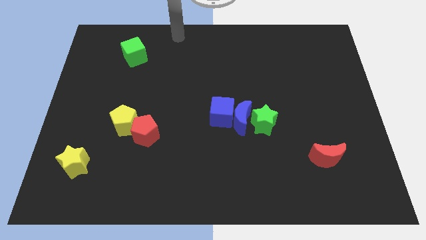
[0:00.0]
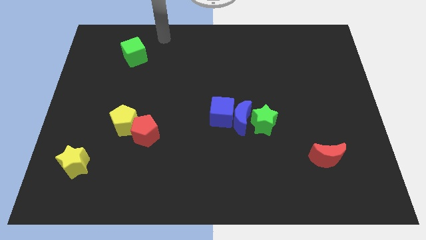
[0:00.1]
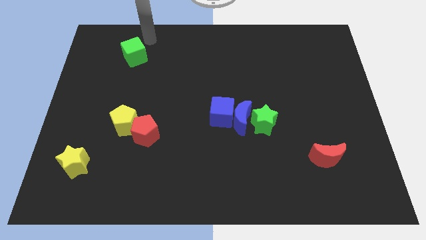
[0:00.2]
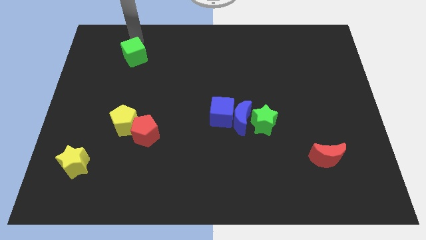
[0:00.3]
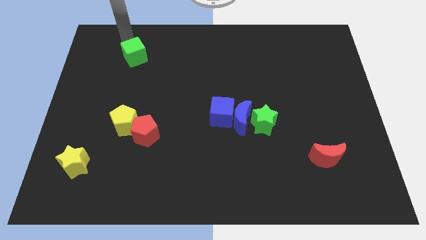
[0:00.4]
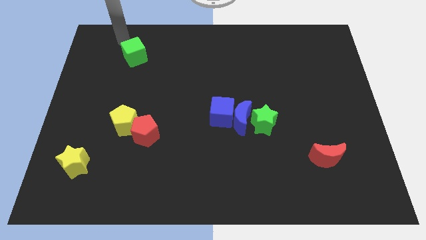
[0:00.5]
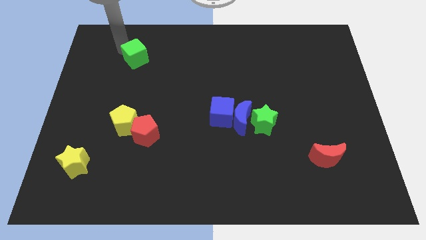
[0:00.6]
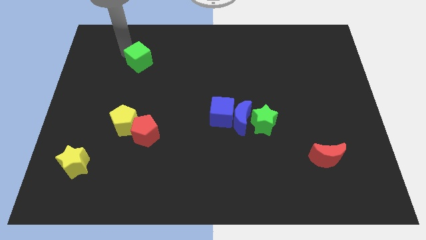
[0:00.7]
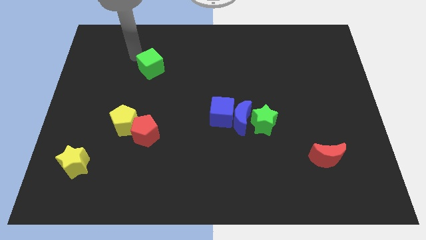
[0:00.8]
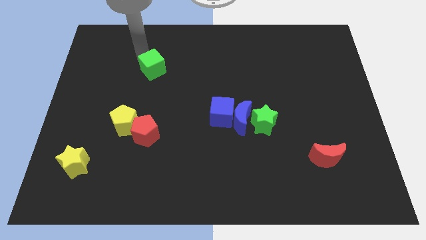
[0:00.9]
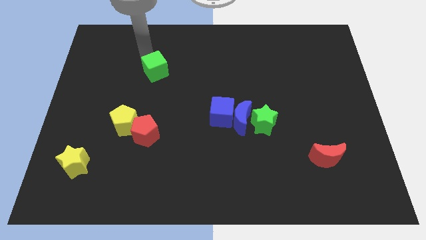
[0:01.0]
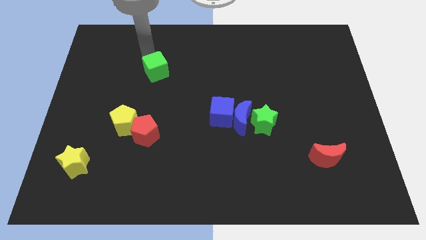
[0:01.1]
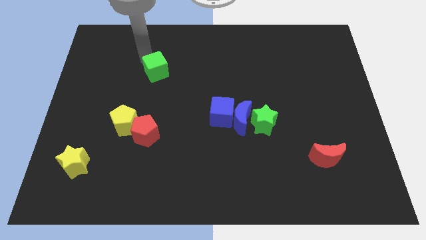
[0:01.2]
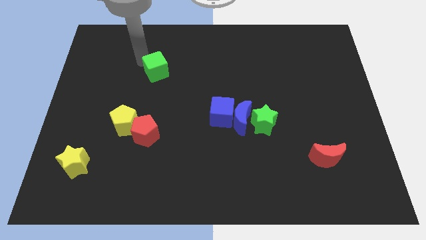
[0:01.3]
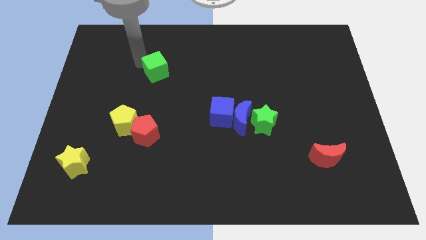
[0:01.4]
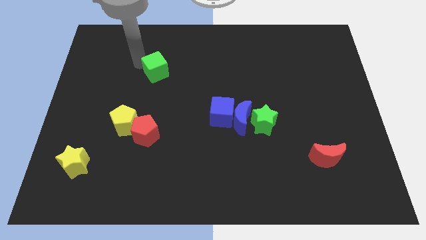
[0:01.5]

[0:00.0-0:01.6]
push the green cube slightly to the bottom

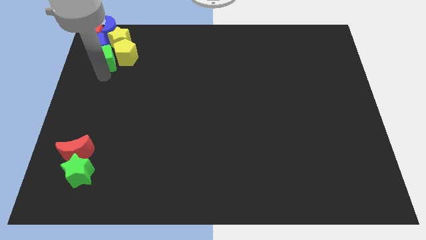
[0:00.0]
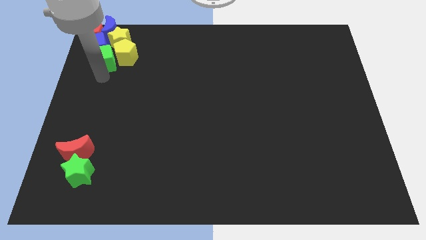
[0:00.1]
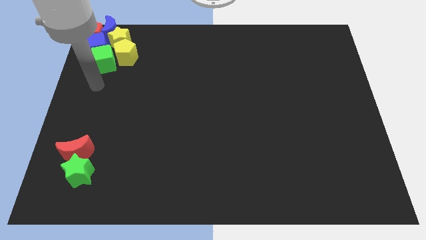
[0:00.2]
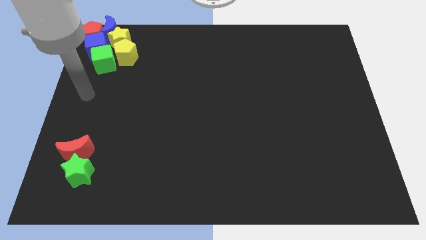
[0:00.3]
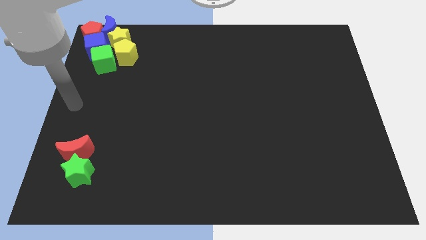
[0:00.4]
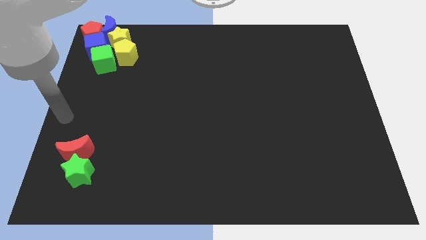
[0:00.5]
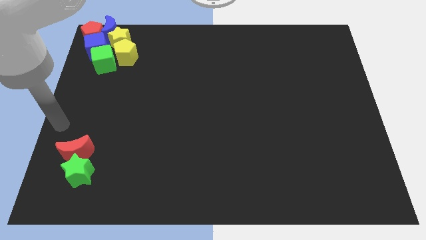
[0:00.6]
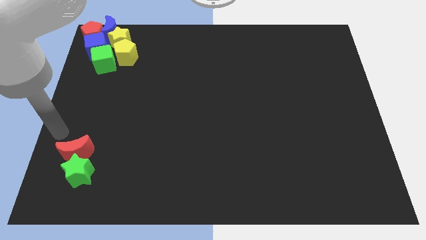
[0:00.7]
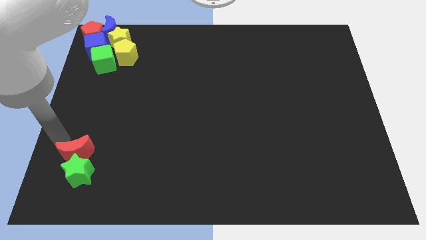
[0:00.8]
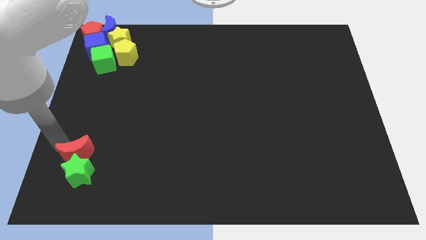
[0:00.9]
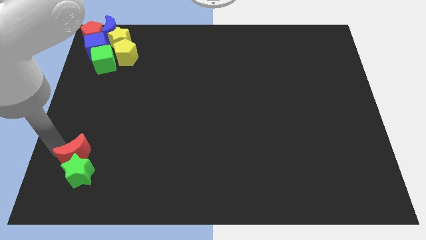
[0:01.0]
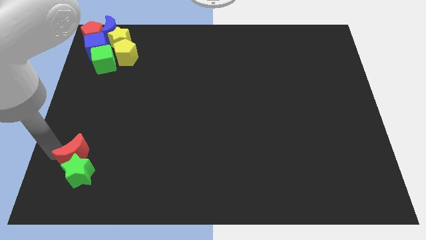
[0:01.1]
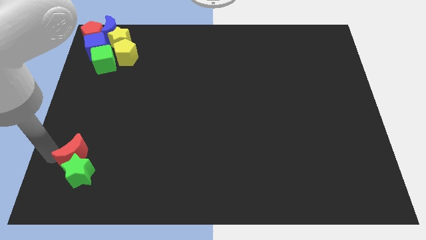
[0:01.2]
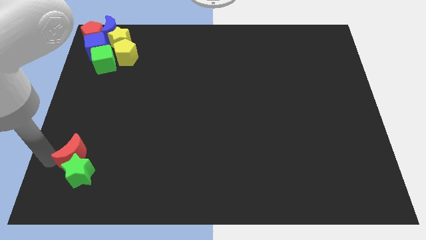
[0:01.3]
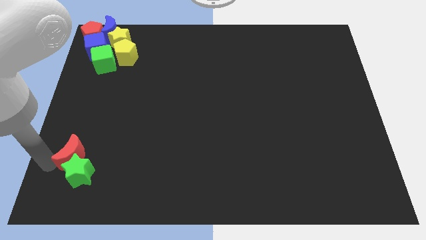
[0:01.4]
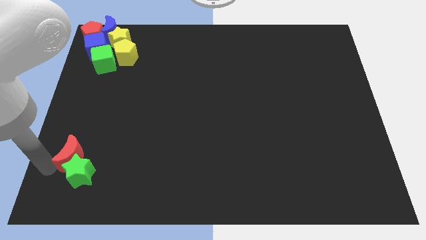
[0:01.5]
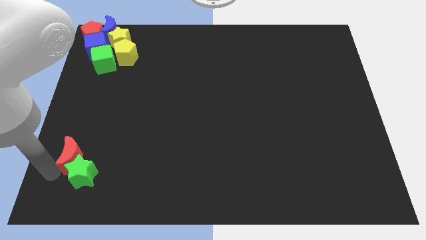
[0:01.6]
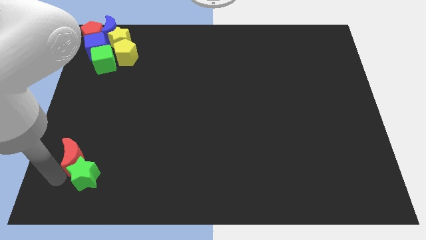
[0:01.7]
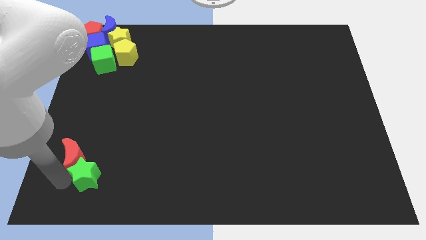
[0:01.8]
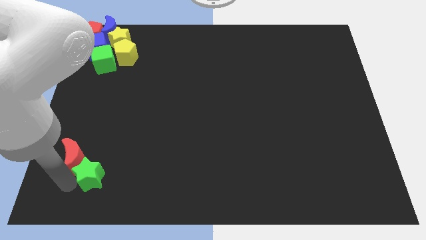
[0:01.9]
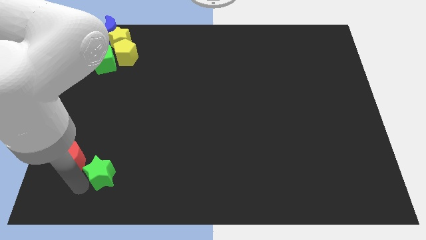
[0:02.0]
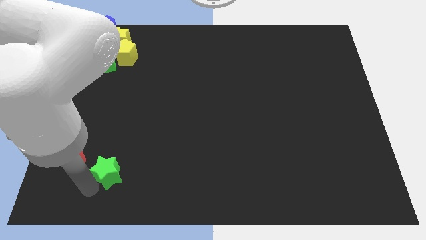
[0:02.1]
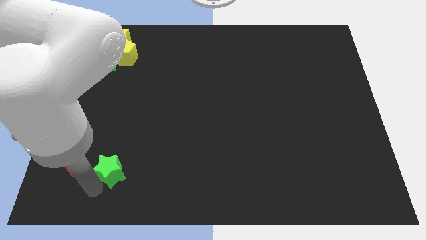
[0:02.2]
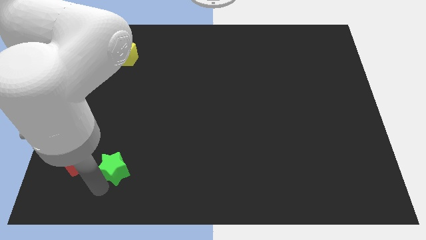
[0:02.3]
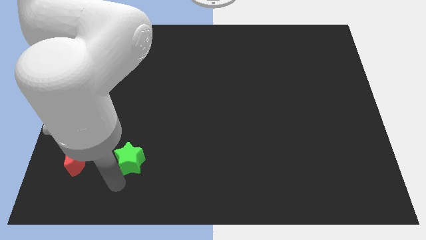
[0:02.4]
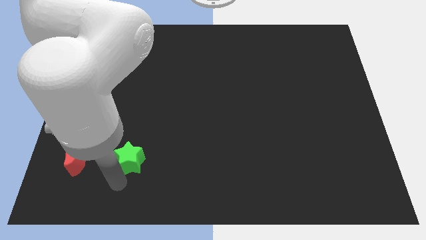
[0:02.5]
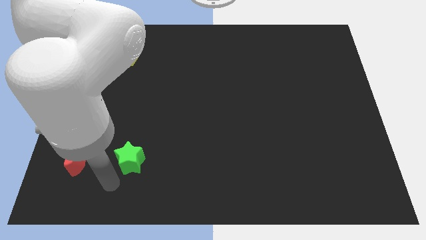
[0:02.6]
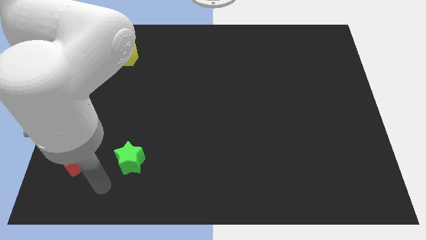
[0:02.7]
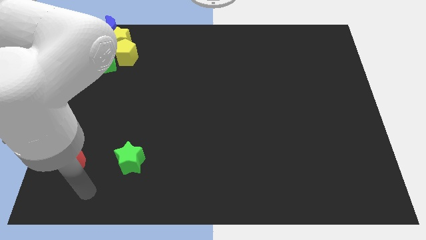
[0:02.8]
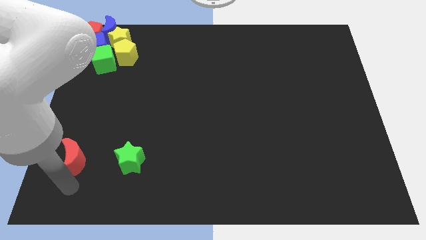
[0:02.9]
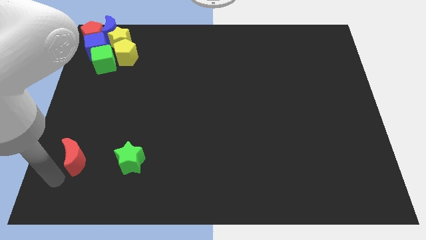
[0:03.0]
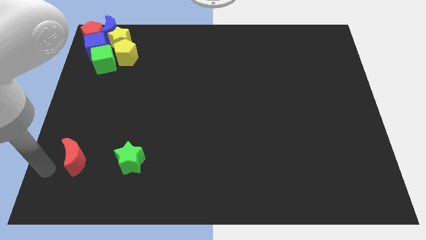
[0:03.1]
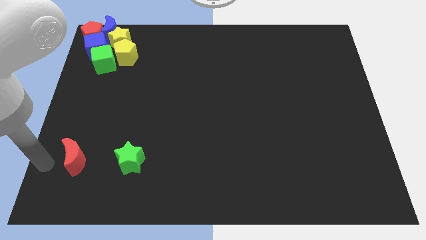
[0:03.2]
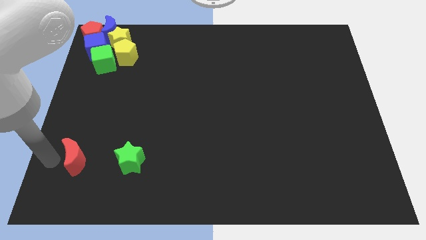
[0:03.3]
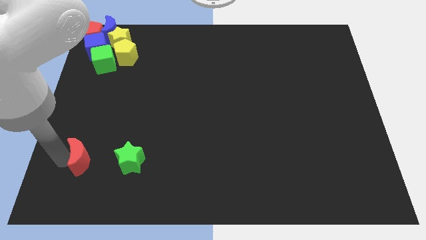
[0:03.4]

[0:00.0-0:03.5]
separate the red crescent and the green star

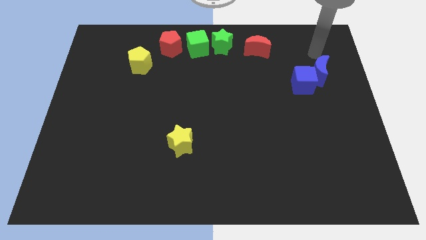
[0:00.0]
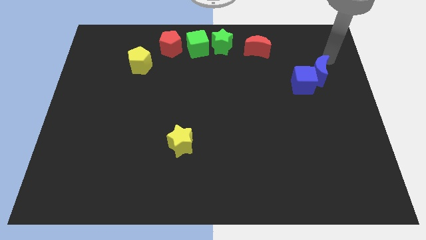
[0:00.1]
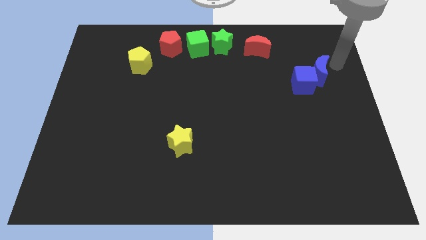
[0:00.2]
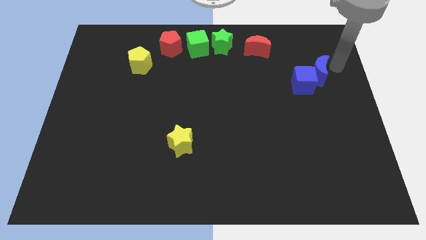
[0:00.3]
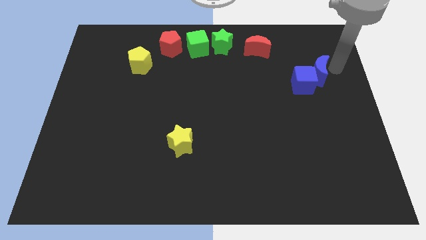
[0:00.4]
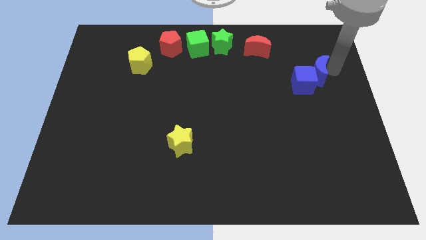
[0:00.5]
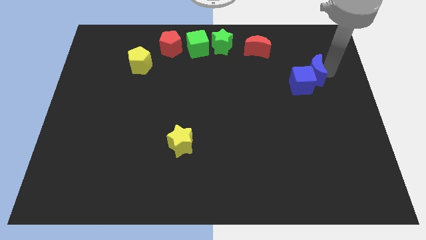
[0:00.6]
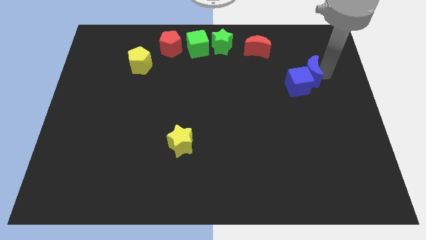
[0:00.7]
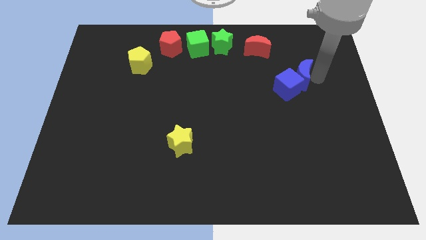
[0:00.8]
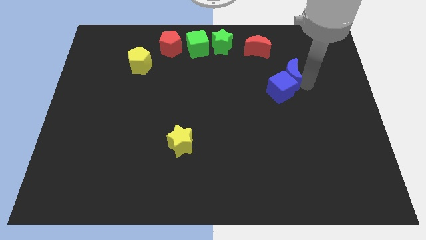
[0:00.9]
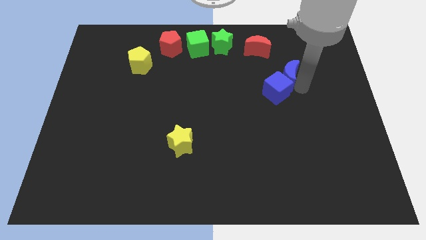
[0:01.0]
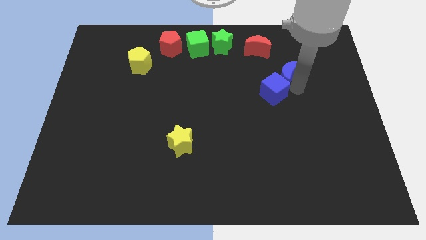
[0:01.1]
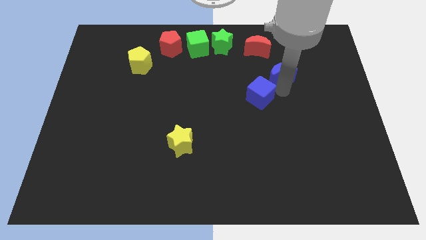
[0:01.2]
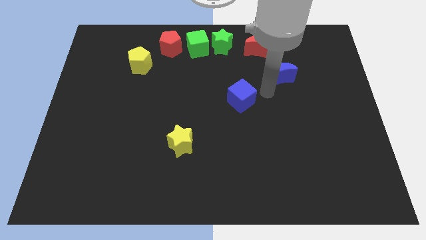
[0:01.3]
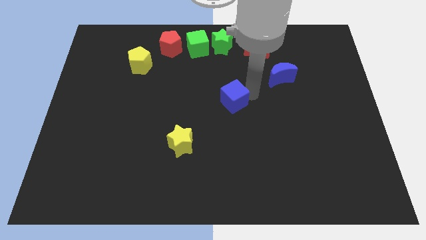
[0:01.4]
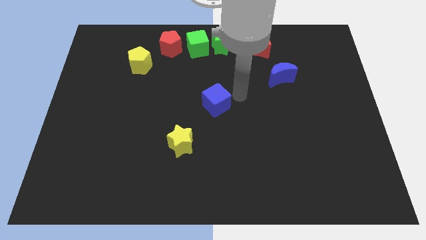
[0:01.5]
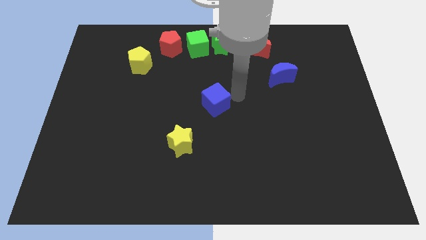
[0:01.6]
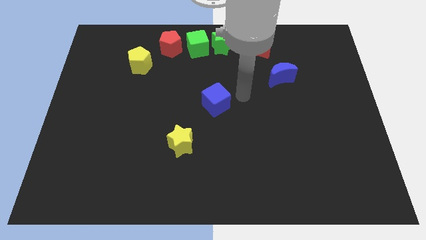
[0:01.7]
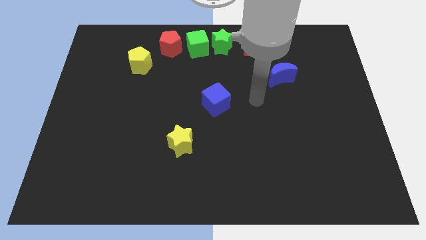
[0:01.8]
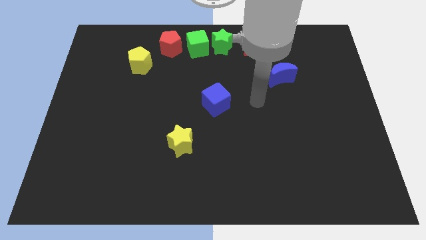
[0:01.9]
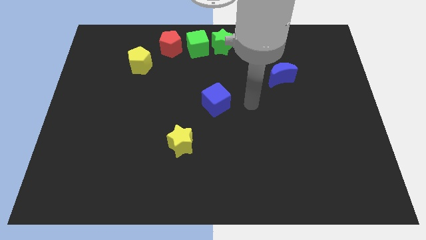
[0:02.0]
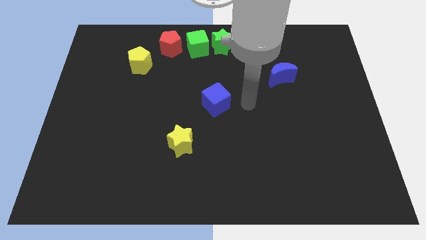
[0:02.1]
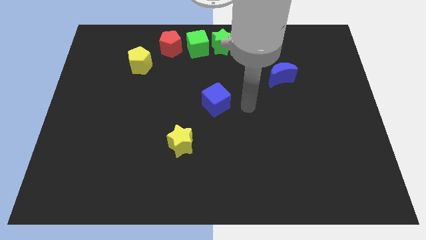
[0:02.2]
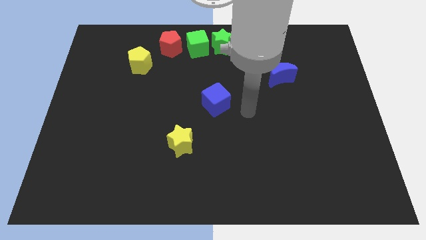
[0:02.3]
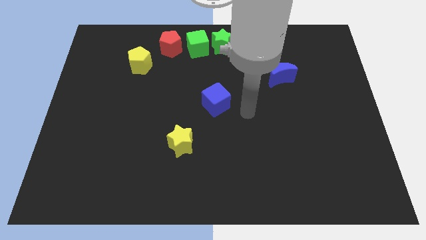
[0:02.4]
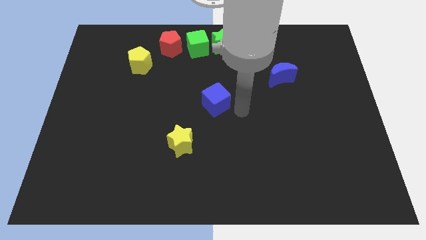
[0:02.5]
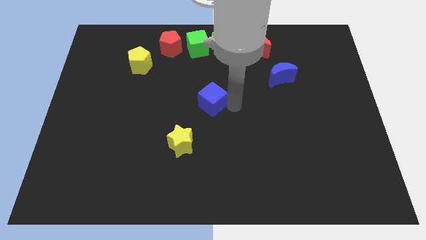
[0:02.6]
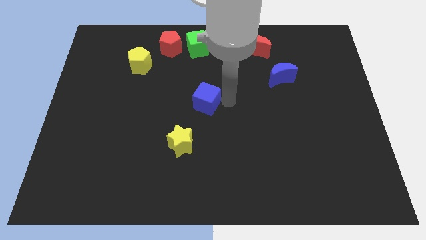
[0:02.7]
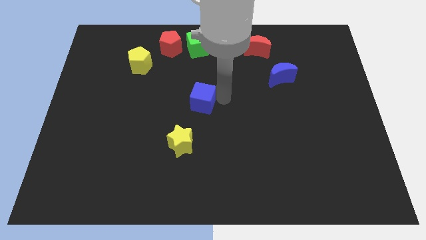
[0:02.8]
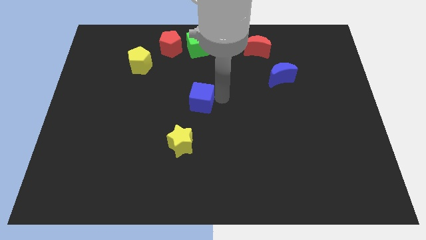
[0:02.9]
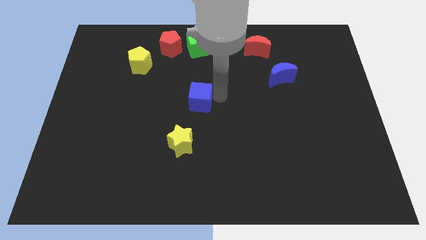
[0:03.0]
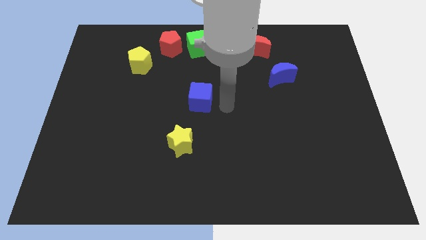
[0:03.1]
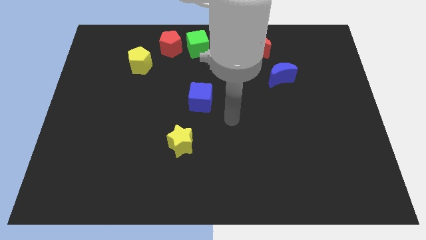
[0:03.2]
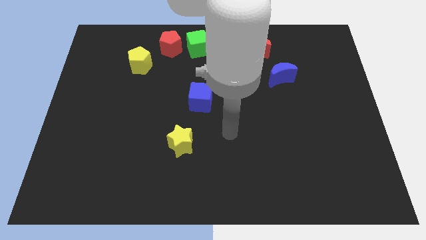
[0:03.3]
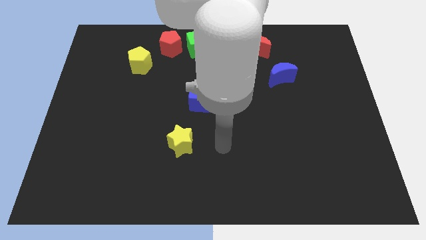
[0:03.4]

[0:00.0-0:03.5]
separate blue cube from the blue moon

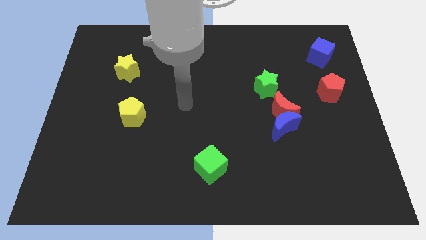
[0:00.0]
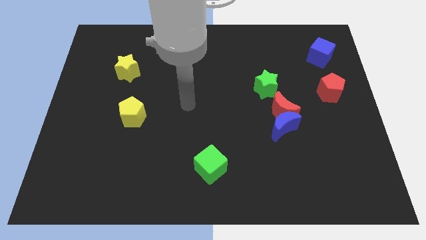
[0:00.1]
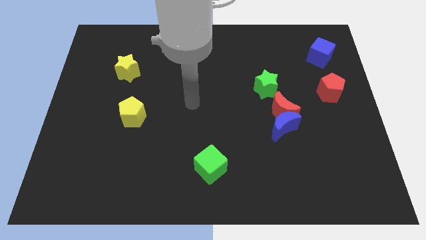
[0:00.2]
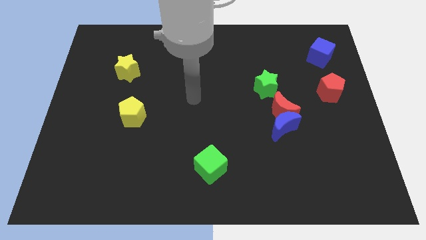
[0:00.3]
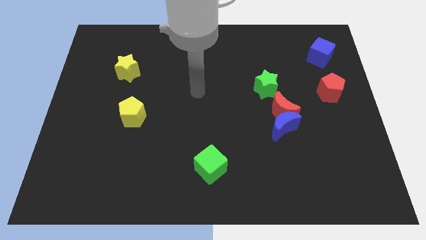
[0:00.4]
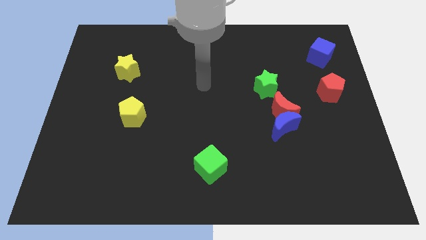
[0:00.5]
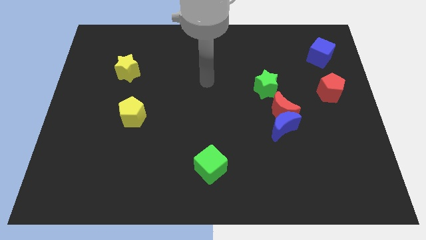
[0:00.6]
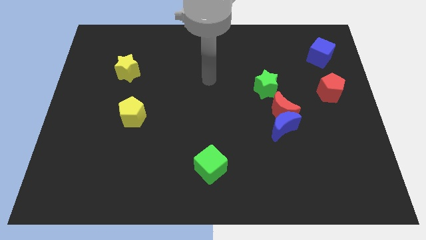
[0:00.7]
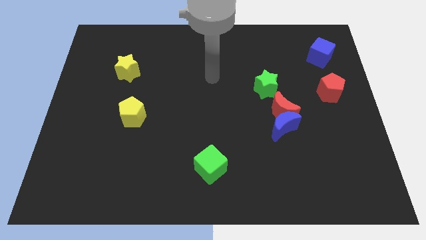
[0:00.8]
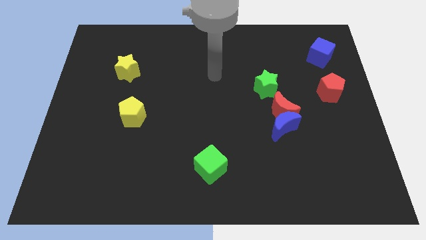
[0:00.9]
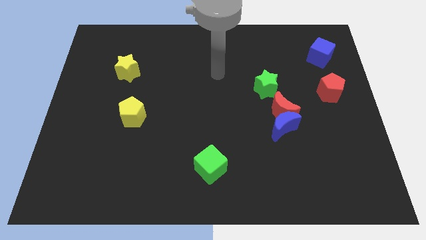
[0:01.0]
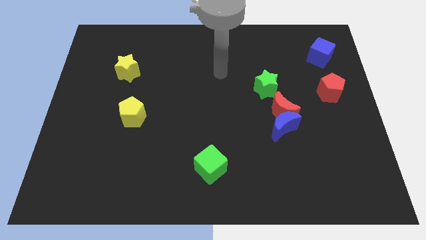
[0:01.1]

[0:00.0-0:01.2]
move your hand towards the top side
